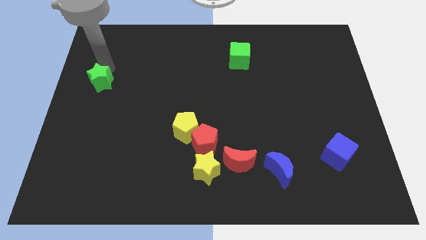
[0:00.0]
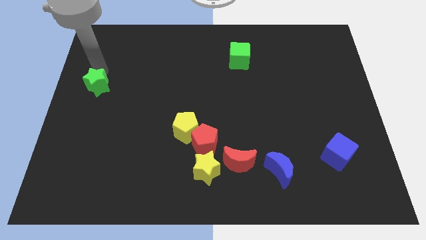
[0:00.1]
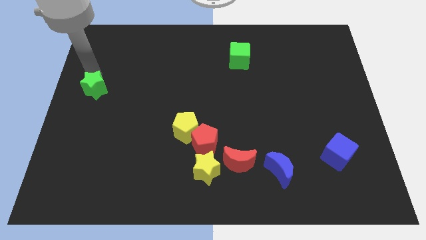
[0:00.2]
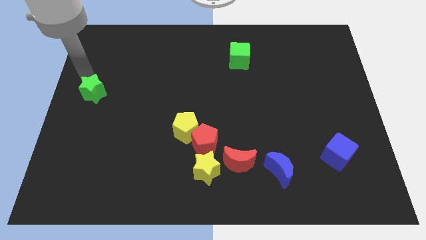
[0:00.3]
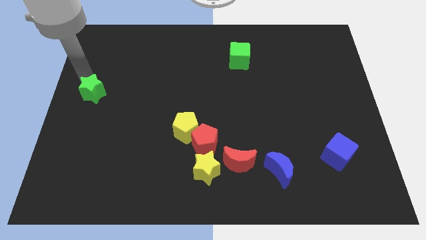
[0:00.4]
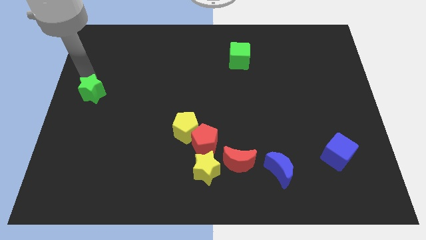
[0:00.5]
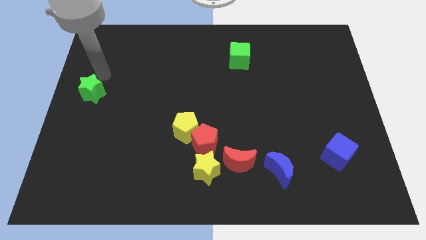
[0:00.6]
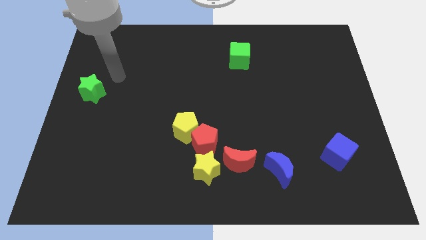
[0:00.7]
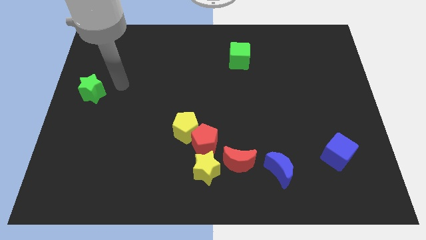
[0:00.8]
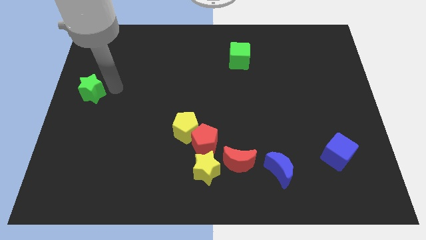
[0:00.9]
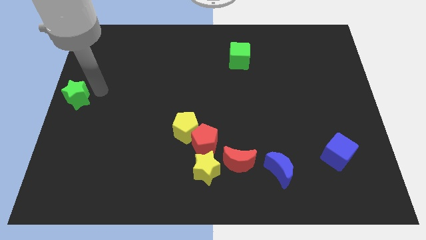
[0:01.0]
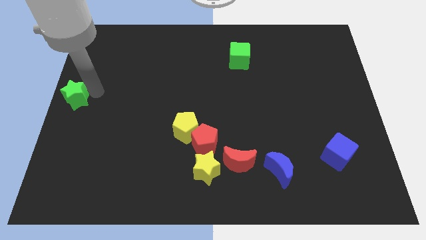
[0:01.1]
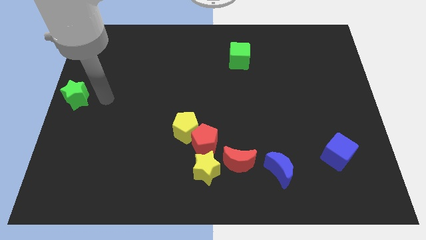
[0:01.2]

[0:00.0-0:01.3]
push the green star to the center left side of the board

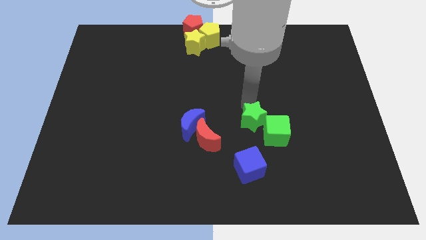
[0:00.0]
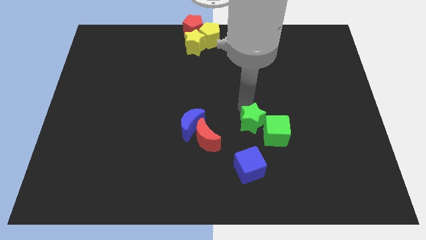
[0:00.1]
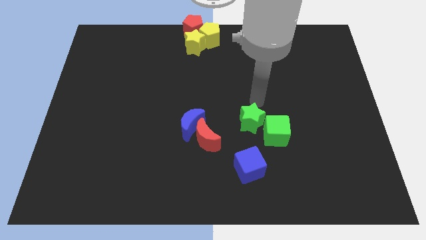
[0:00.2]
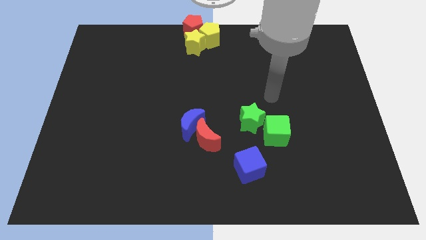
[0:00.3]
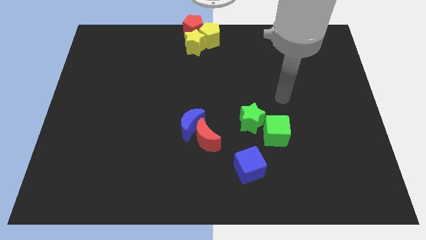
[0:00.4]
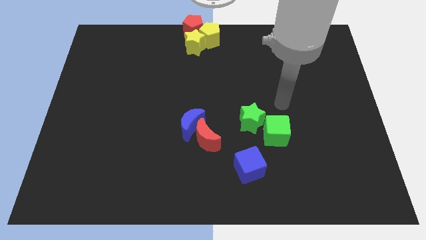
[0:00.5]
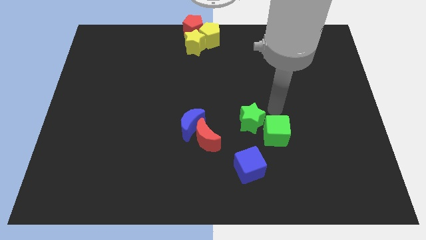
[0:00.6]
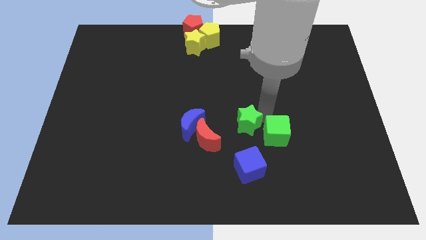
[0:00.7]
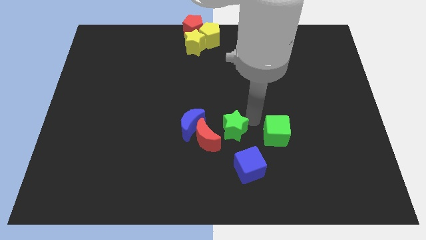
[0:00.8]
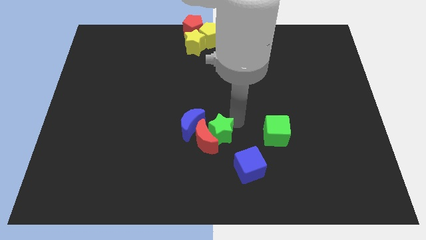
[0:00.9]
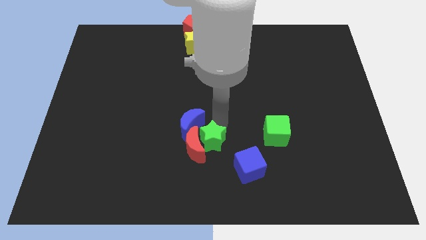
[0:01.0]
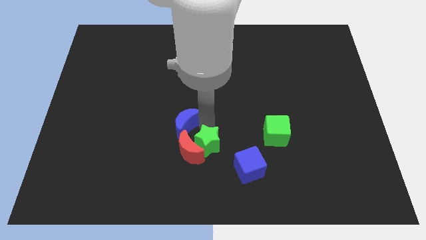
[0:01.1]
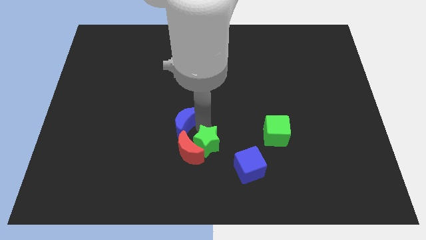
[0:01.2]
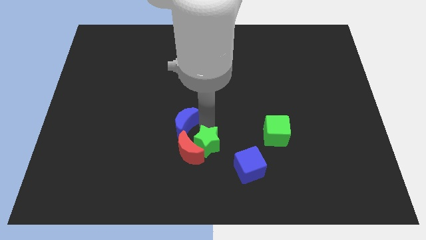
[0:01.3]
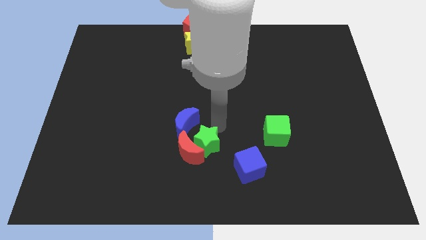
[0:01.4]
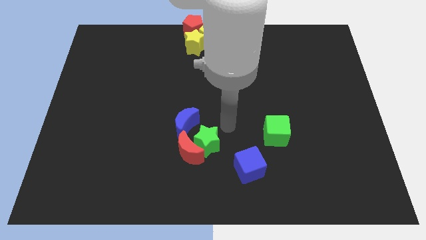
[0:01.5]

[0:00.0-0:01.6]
move green star apart from the green cube

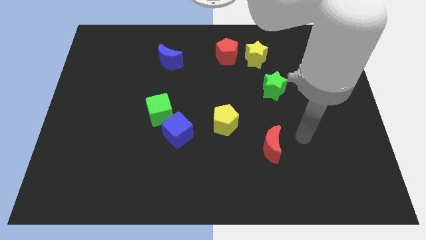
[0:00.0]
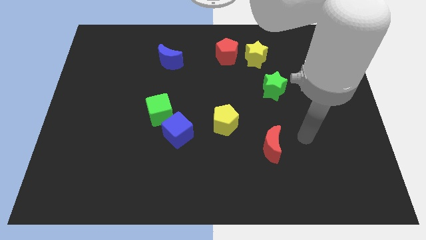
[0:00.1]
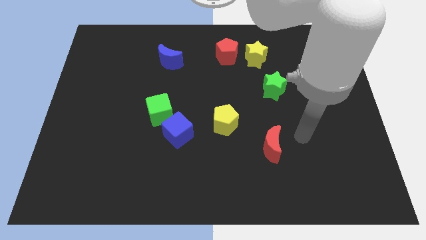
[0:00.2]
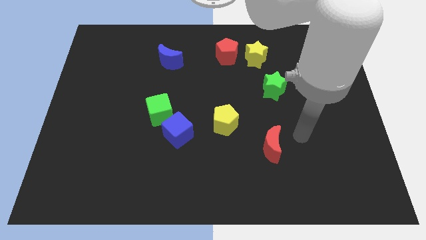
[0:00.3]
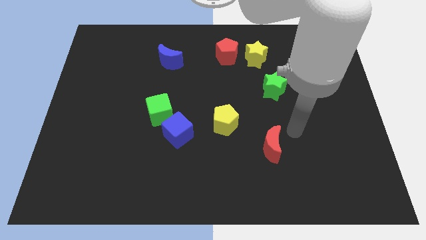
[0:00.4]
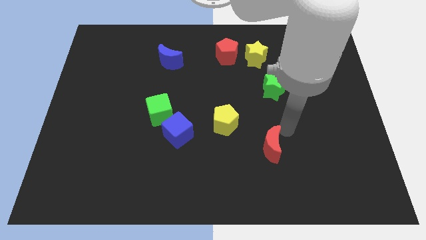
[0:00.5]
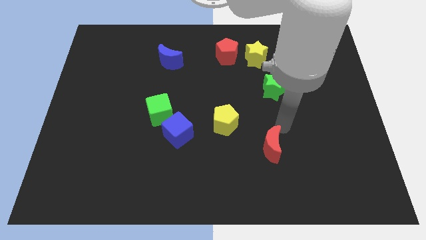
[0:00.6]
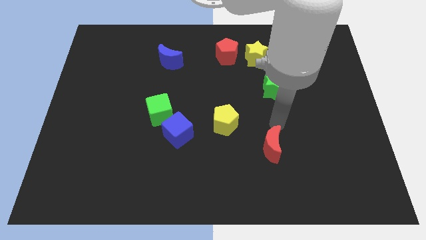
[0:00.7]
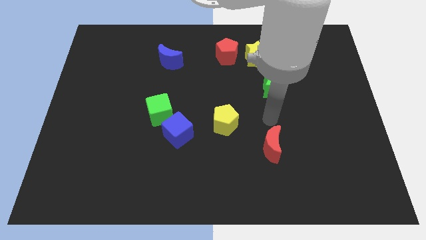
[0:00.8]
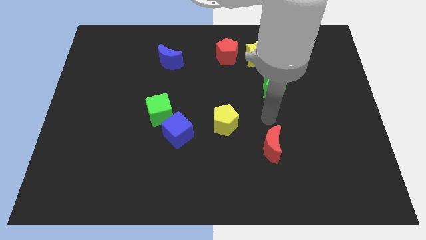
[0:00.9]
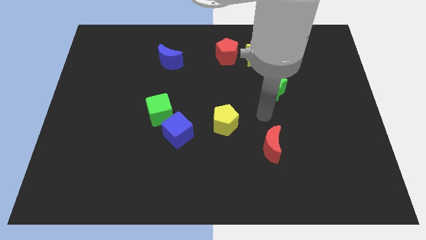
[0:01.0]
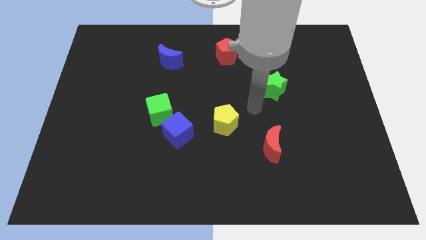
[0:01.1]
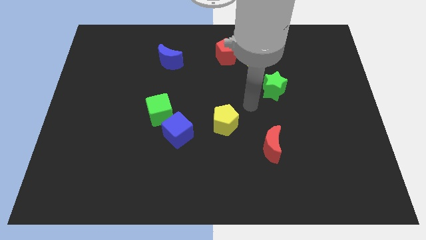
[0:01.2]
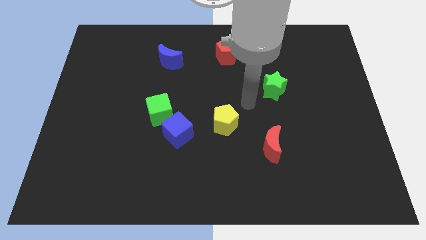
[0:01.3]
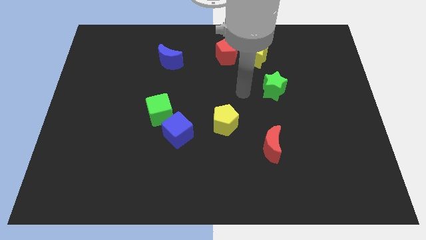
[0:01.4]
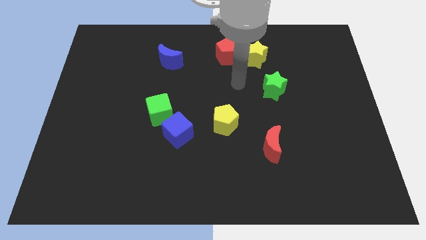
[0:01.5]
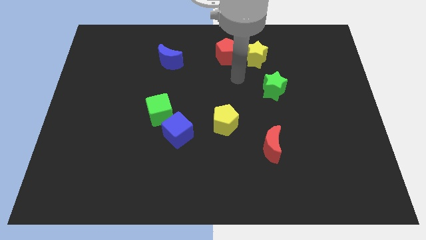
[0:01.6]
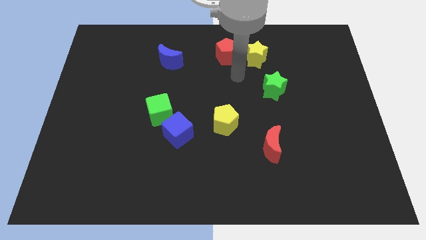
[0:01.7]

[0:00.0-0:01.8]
move the arm towards the red pentagon

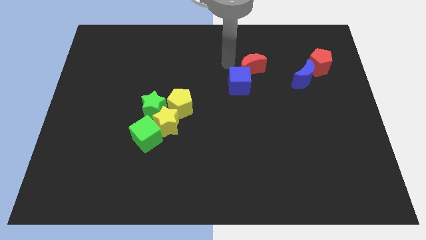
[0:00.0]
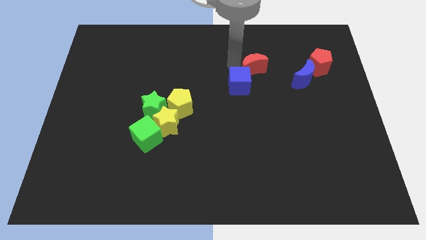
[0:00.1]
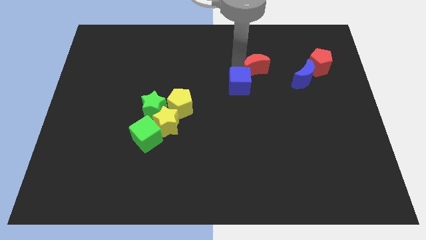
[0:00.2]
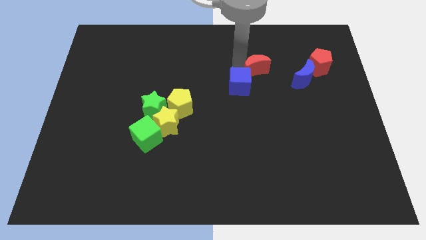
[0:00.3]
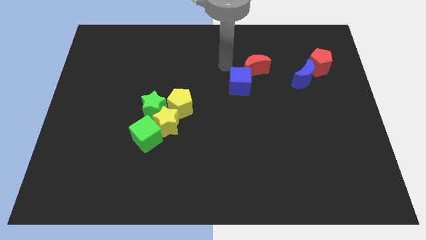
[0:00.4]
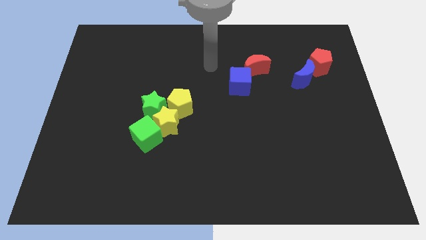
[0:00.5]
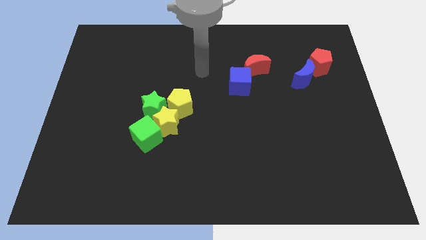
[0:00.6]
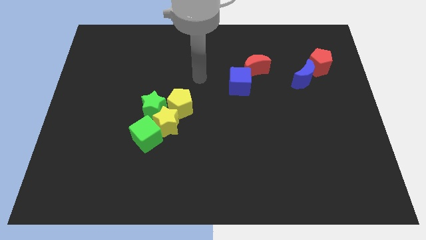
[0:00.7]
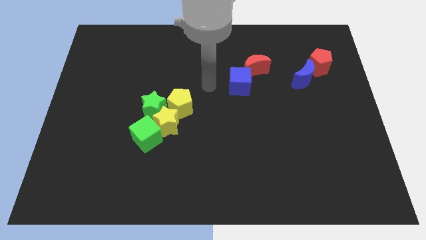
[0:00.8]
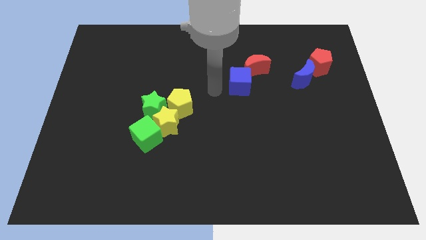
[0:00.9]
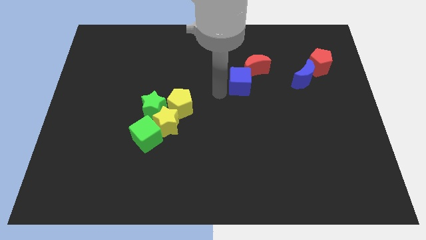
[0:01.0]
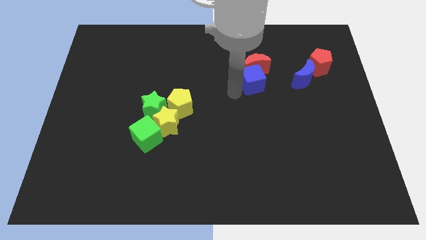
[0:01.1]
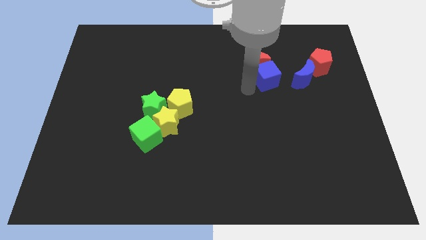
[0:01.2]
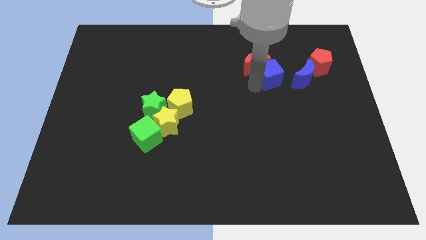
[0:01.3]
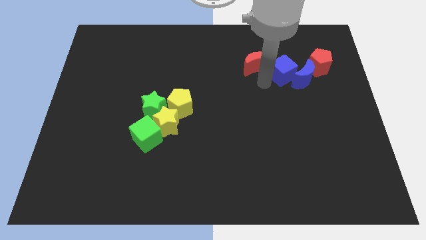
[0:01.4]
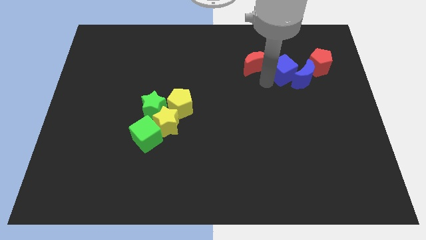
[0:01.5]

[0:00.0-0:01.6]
push the blue cube in between the red and blue crescent

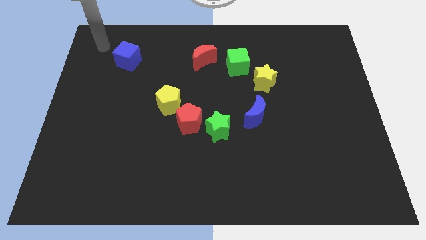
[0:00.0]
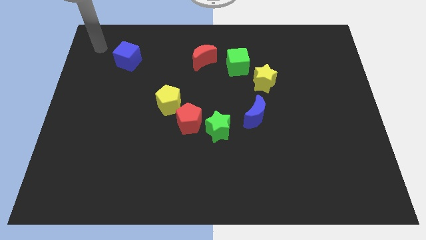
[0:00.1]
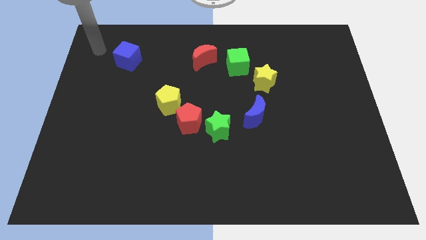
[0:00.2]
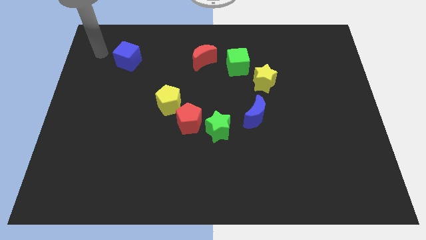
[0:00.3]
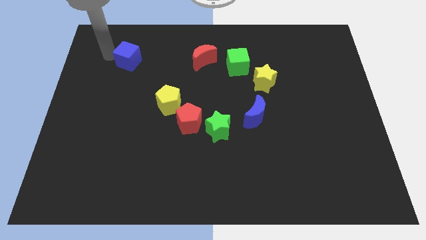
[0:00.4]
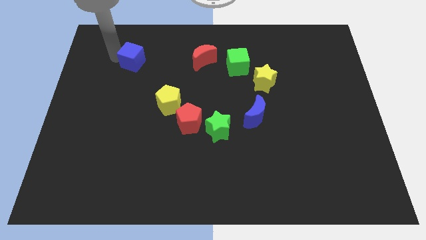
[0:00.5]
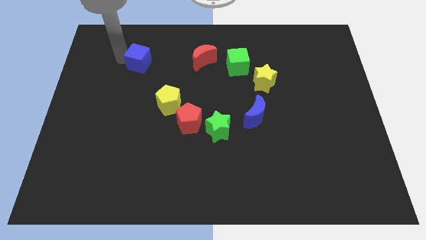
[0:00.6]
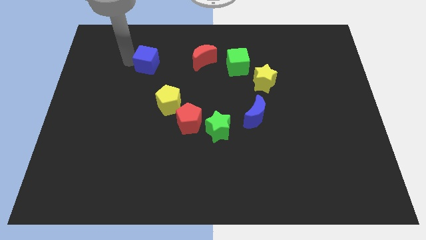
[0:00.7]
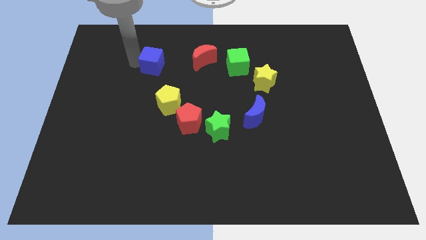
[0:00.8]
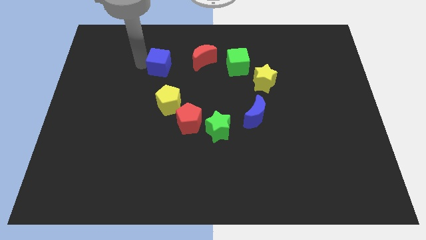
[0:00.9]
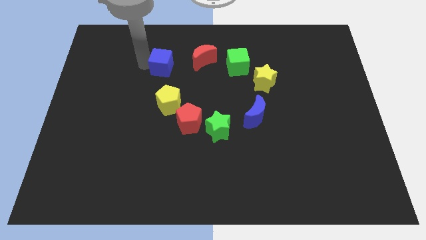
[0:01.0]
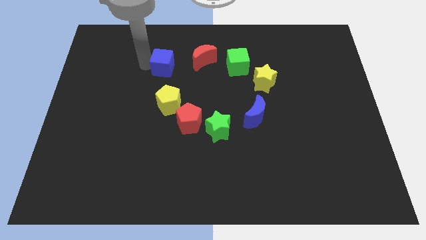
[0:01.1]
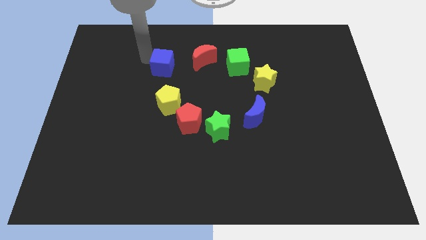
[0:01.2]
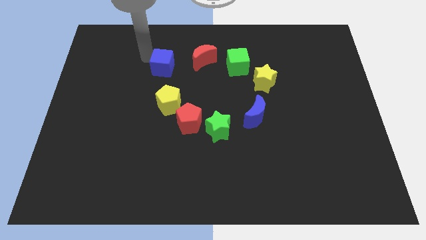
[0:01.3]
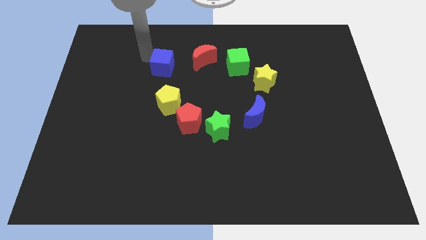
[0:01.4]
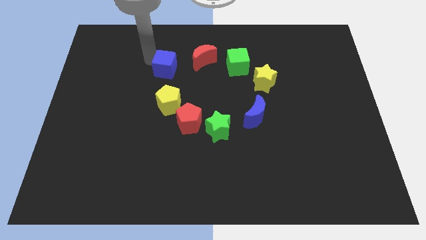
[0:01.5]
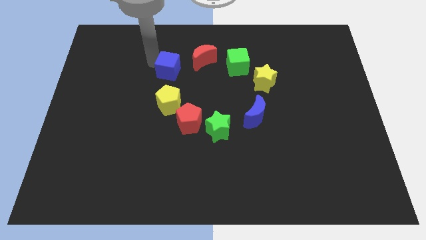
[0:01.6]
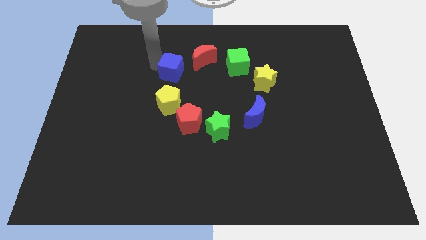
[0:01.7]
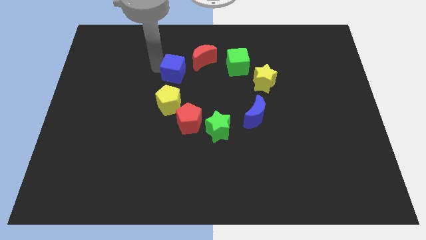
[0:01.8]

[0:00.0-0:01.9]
place the blue cube towards the top of yellow pentagon

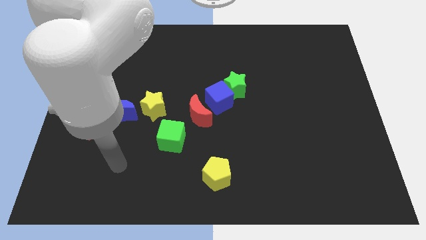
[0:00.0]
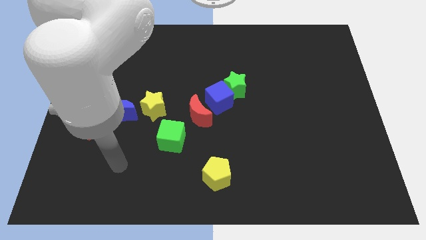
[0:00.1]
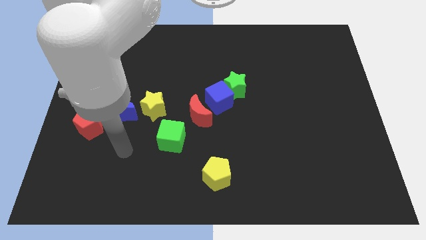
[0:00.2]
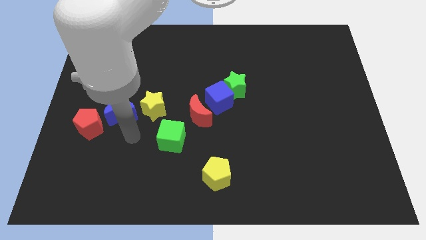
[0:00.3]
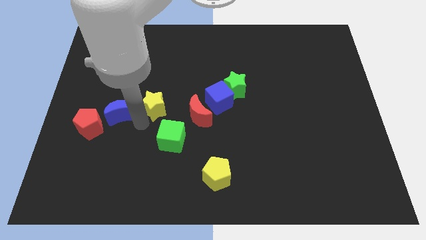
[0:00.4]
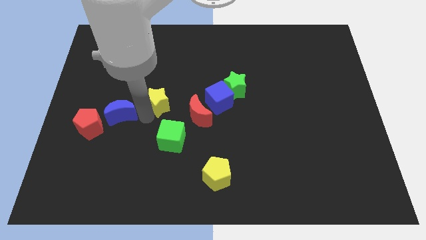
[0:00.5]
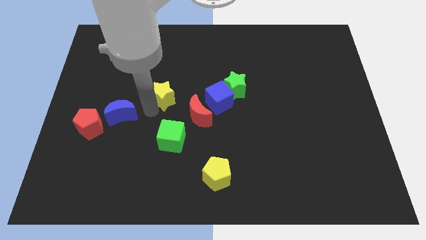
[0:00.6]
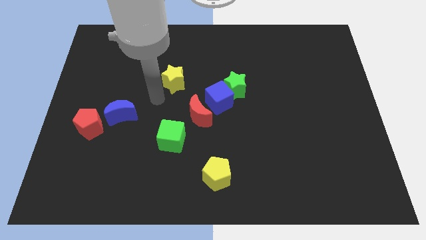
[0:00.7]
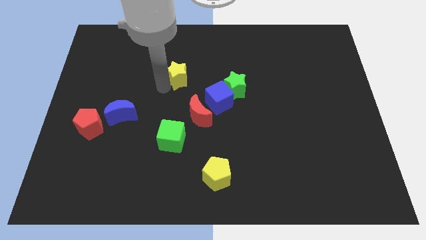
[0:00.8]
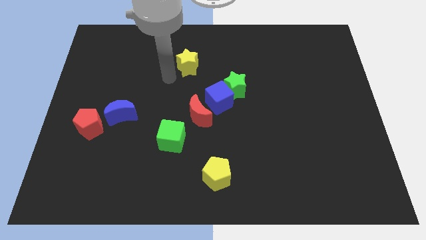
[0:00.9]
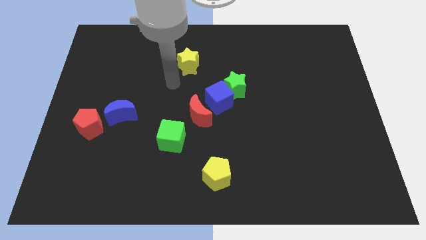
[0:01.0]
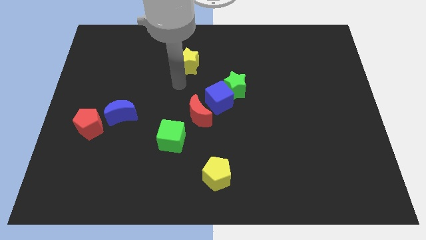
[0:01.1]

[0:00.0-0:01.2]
move the yellow star away from the blue crescent
